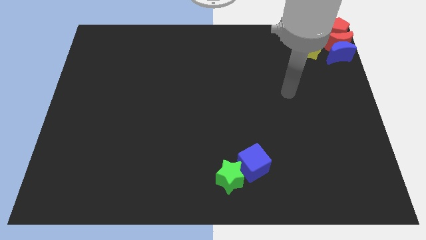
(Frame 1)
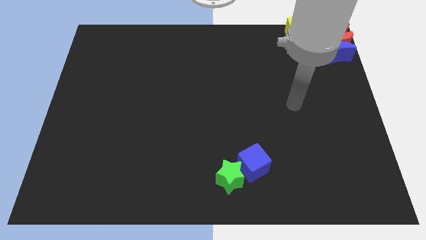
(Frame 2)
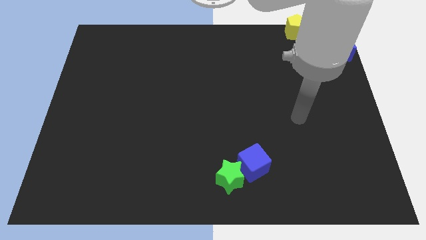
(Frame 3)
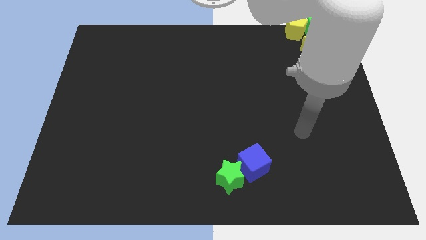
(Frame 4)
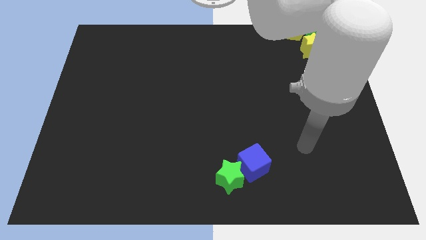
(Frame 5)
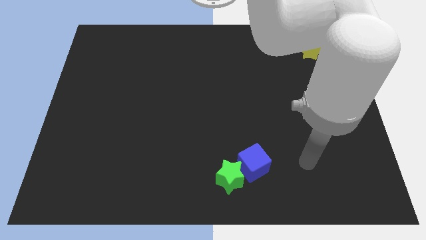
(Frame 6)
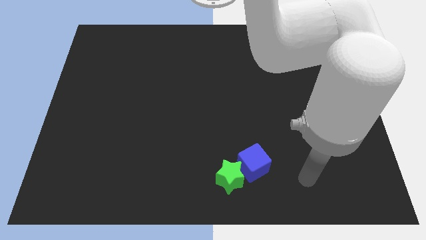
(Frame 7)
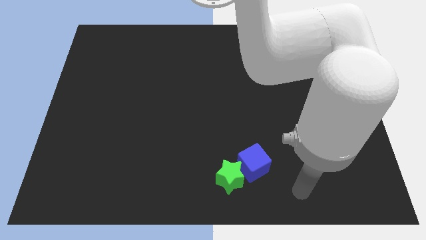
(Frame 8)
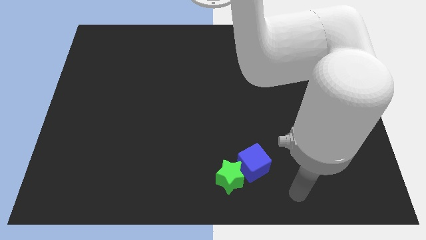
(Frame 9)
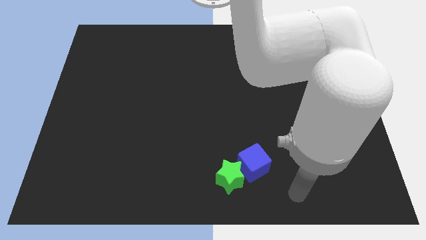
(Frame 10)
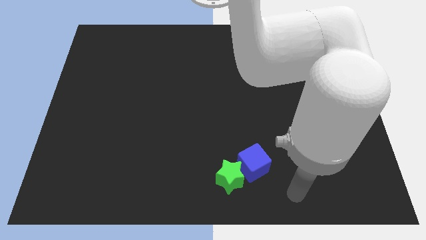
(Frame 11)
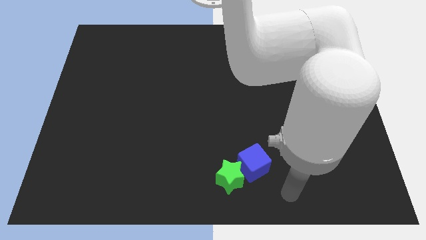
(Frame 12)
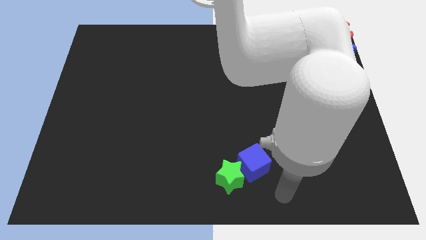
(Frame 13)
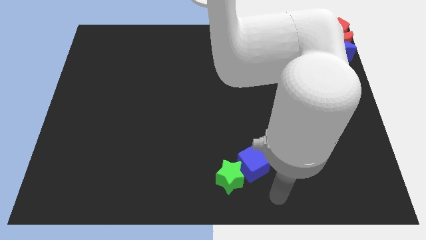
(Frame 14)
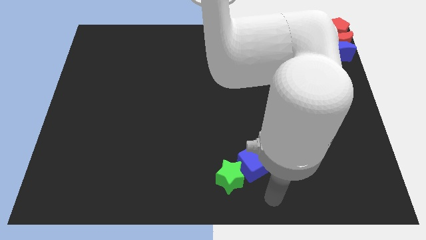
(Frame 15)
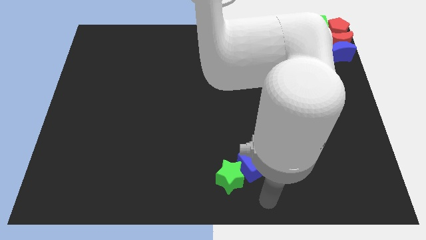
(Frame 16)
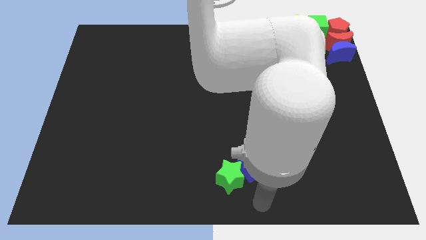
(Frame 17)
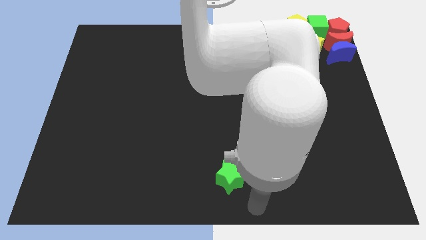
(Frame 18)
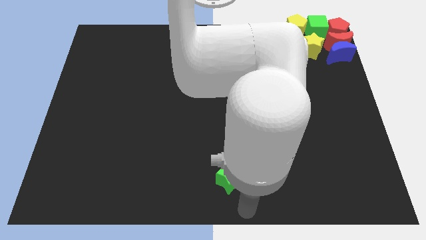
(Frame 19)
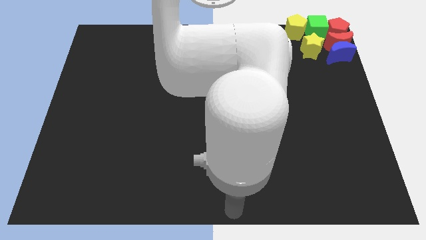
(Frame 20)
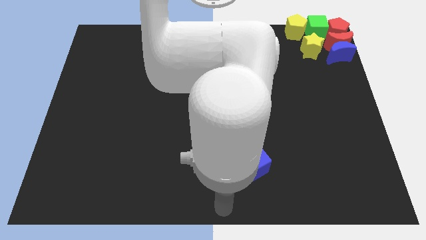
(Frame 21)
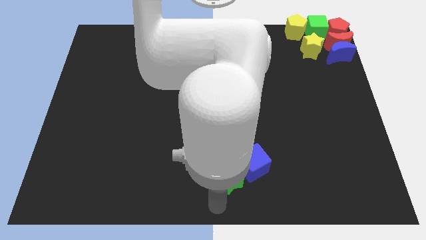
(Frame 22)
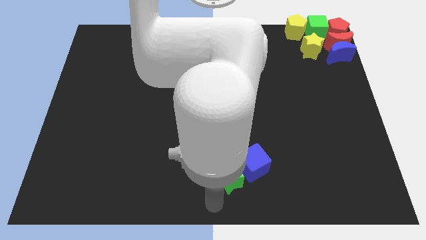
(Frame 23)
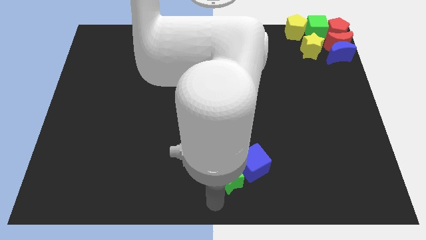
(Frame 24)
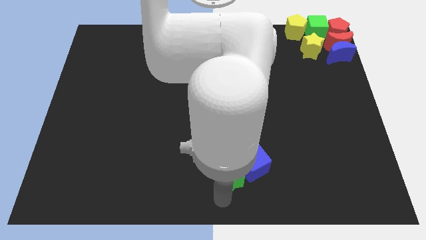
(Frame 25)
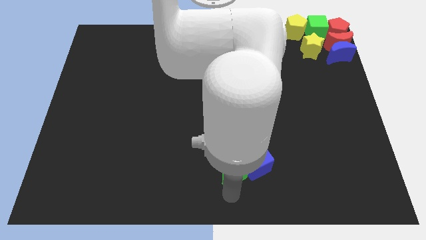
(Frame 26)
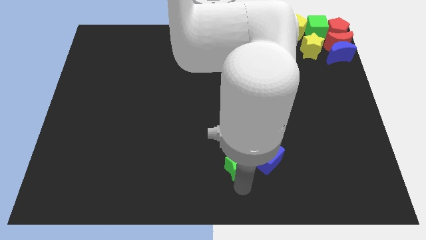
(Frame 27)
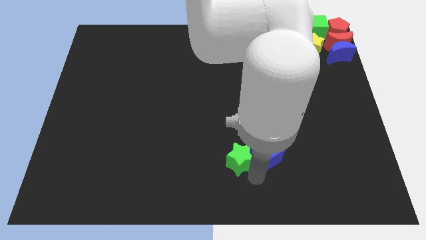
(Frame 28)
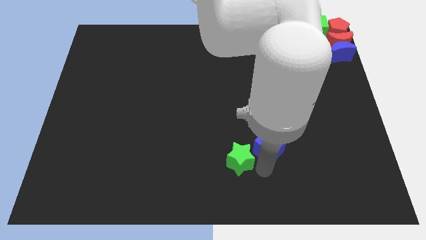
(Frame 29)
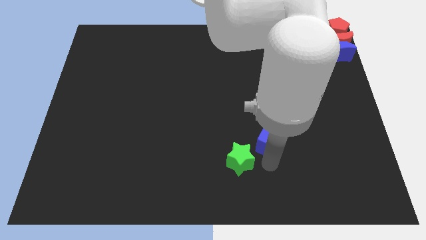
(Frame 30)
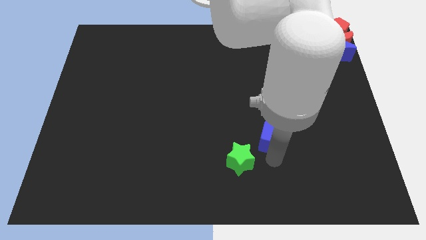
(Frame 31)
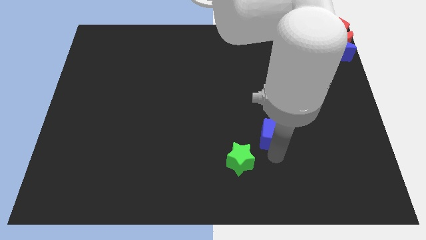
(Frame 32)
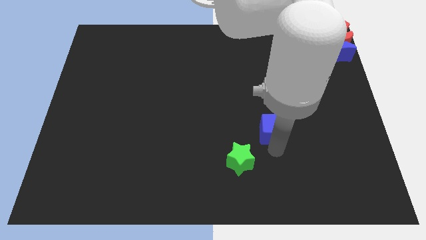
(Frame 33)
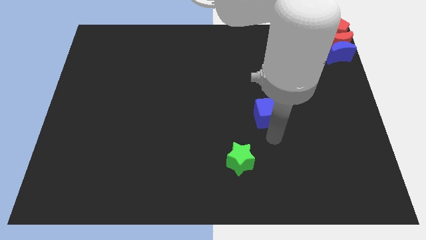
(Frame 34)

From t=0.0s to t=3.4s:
separate the blue cube from the green star

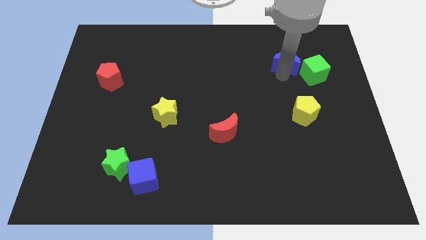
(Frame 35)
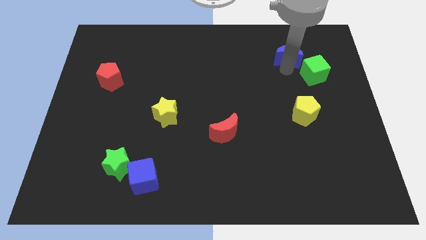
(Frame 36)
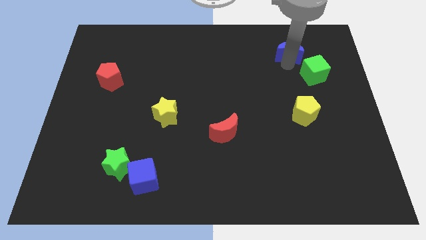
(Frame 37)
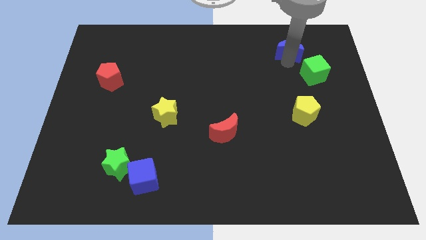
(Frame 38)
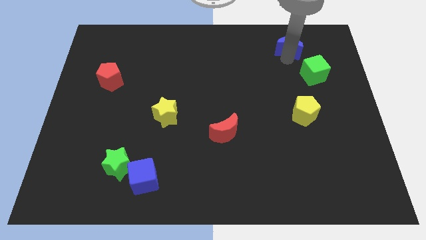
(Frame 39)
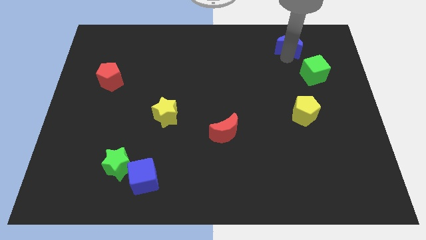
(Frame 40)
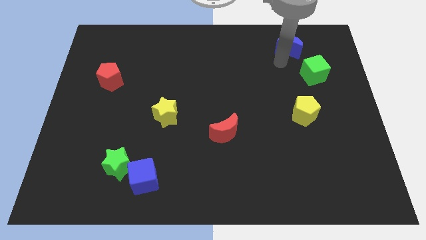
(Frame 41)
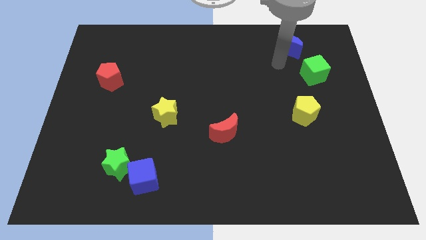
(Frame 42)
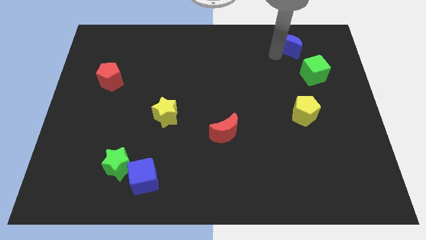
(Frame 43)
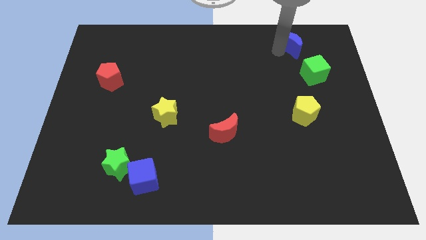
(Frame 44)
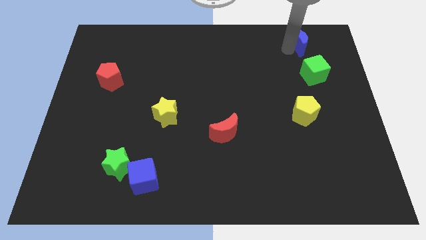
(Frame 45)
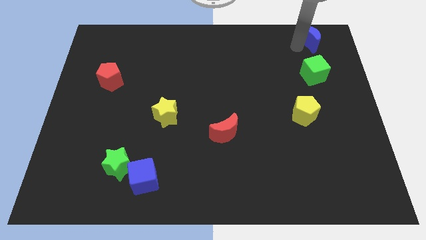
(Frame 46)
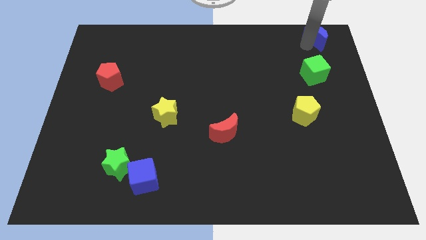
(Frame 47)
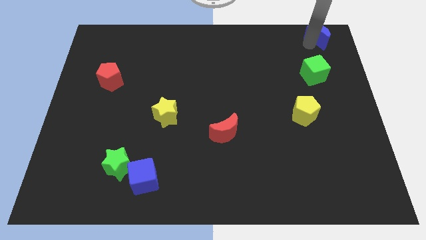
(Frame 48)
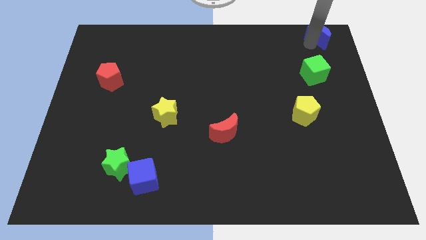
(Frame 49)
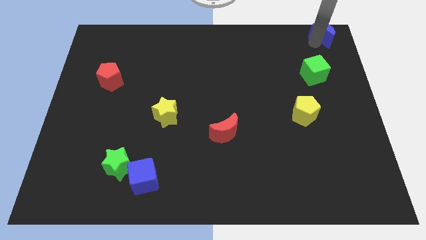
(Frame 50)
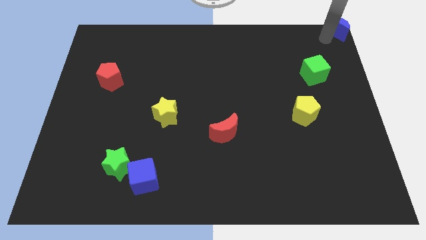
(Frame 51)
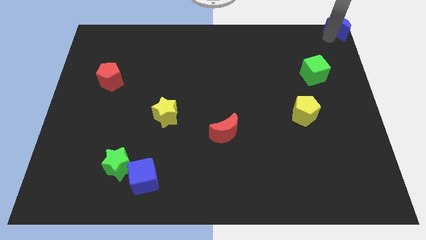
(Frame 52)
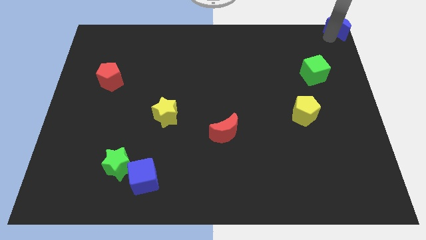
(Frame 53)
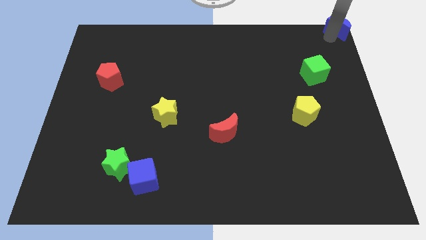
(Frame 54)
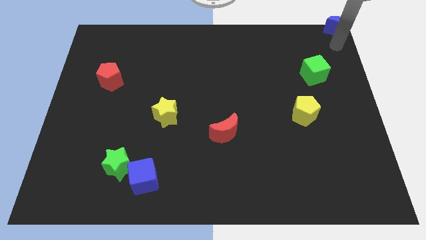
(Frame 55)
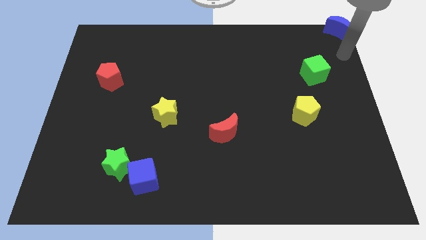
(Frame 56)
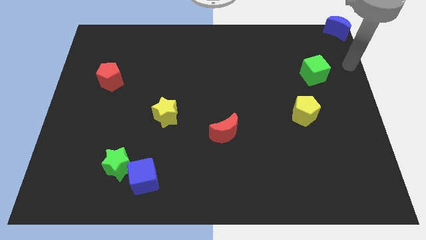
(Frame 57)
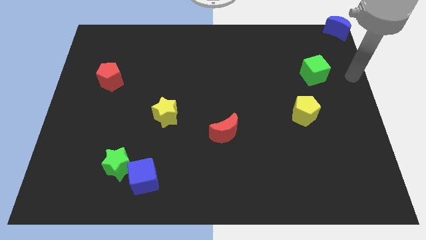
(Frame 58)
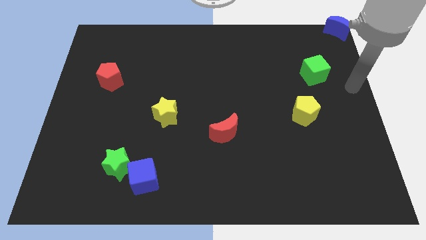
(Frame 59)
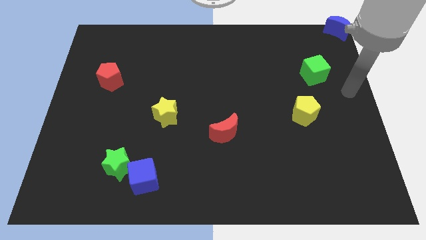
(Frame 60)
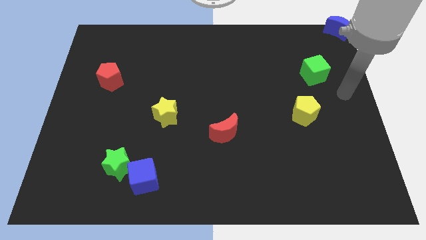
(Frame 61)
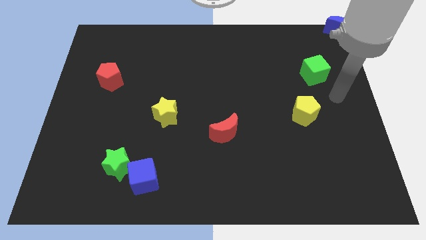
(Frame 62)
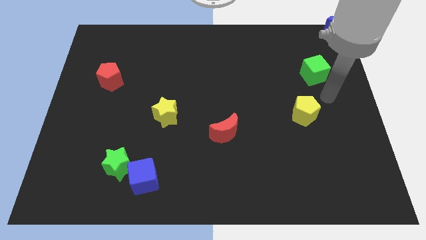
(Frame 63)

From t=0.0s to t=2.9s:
move the blue moon to top right corner of the board

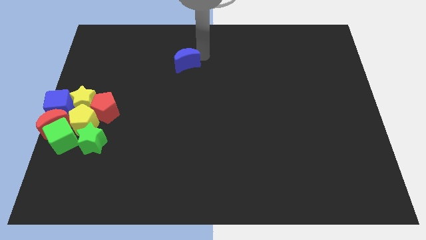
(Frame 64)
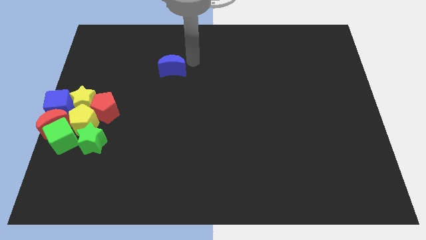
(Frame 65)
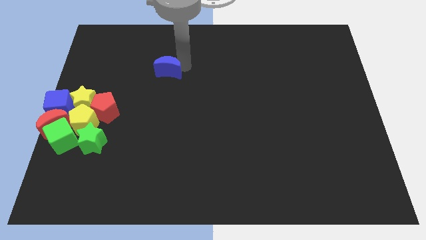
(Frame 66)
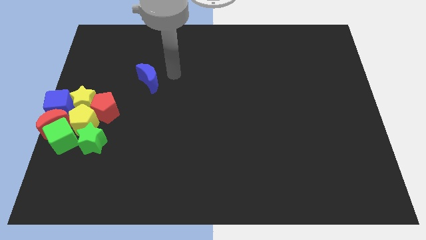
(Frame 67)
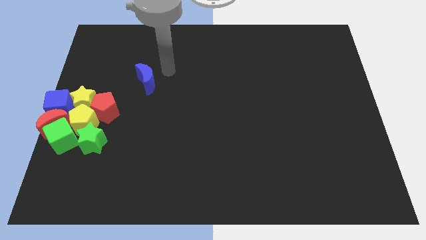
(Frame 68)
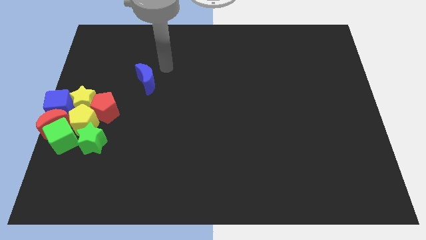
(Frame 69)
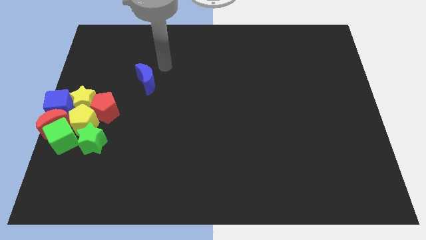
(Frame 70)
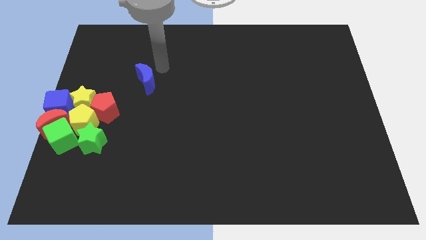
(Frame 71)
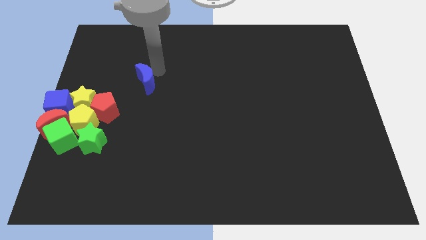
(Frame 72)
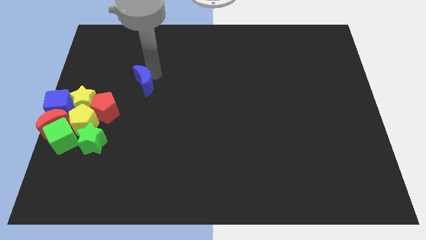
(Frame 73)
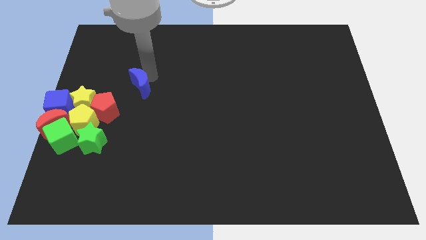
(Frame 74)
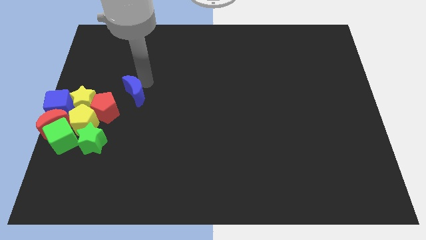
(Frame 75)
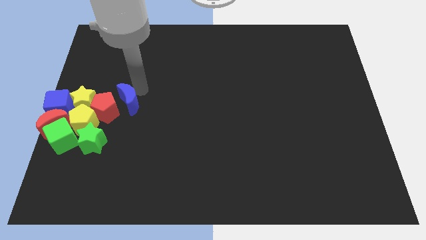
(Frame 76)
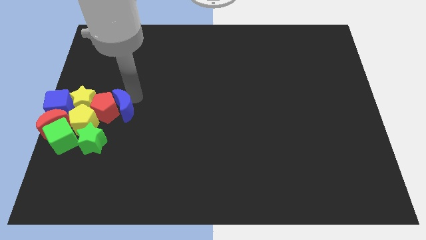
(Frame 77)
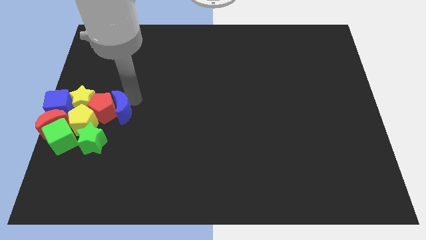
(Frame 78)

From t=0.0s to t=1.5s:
push the blue crescent to the right of the red pentagon

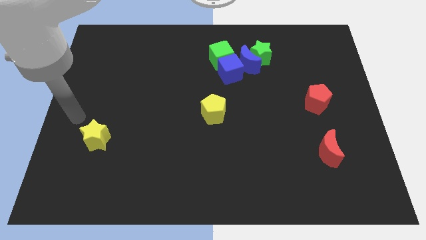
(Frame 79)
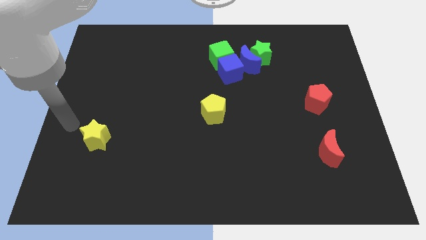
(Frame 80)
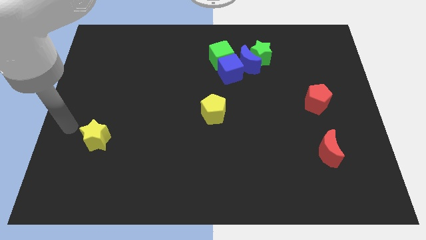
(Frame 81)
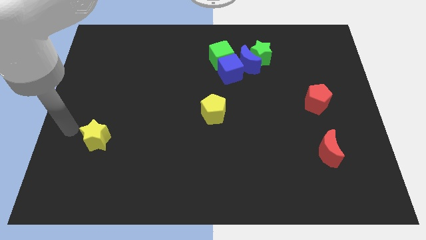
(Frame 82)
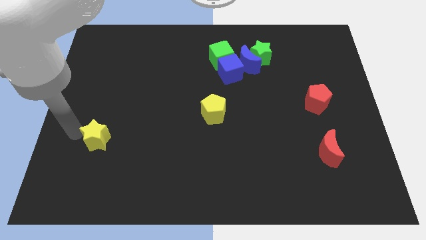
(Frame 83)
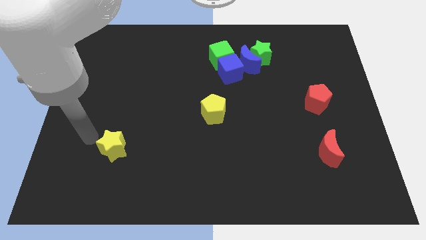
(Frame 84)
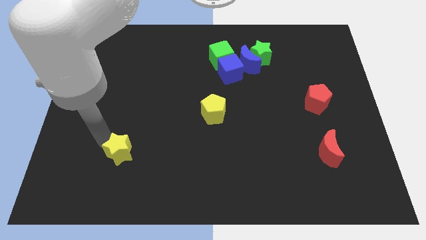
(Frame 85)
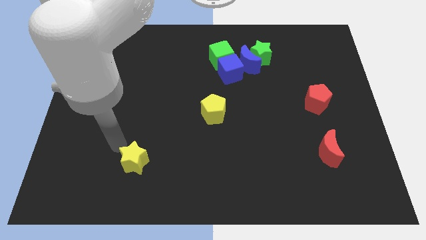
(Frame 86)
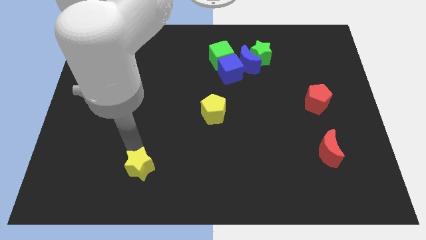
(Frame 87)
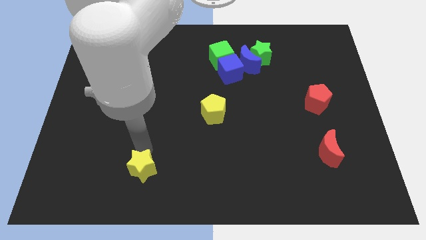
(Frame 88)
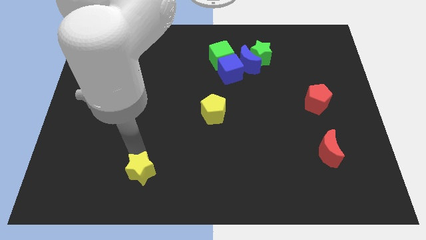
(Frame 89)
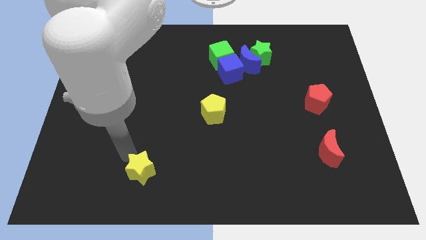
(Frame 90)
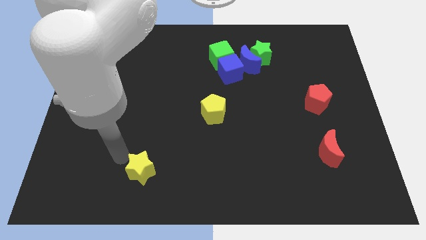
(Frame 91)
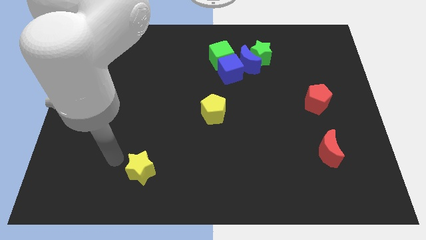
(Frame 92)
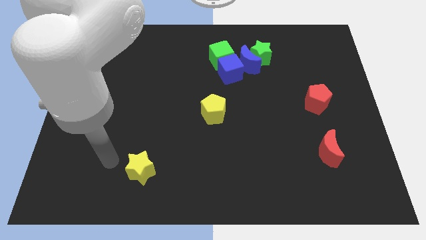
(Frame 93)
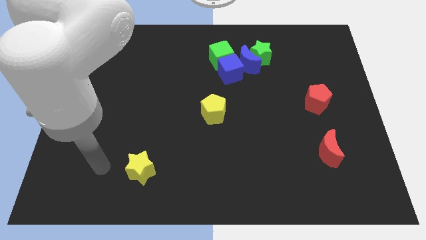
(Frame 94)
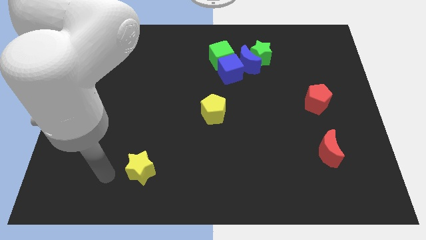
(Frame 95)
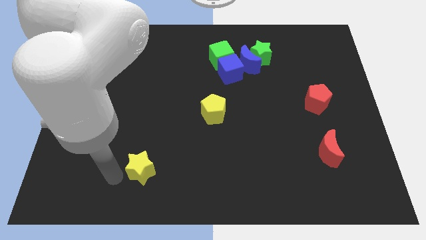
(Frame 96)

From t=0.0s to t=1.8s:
place the yellow star diagonally to the yellow pentagon
